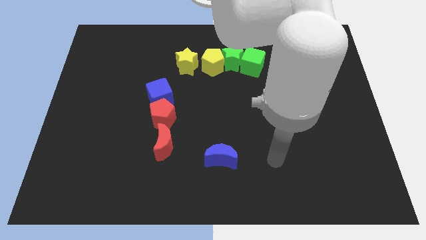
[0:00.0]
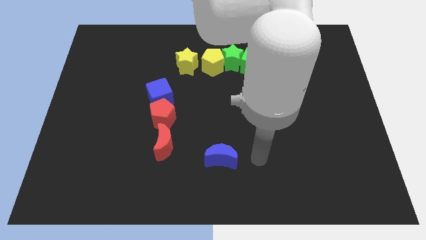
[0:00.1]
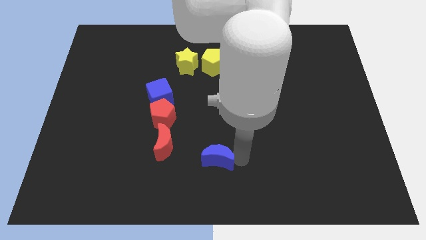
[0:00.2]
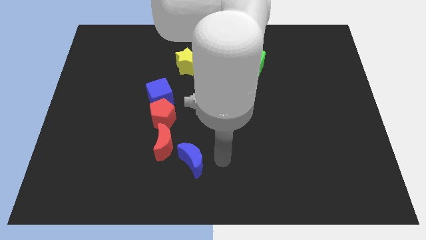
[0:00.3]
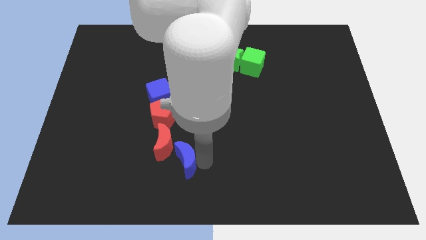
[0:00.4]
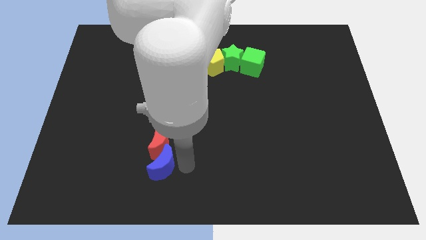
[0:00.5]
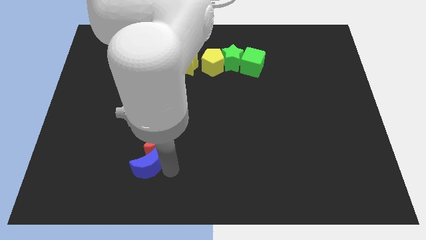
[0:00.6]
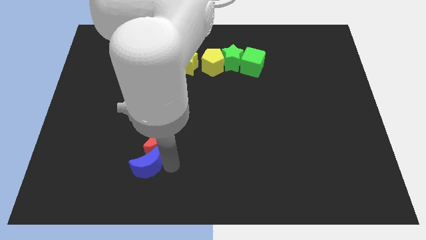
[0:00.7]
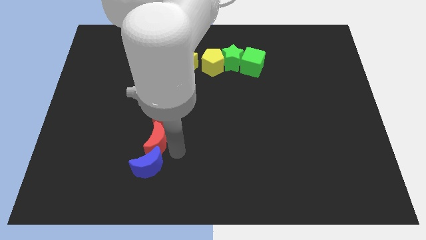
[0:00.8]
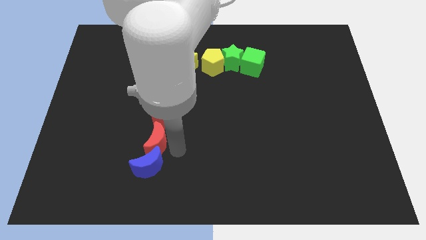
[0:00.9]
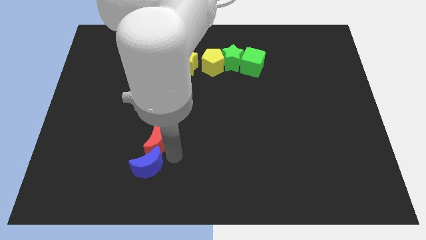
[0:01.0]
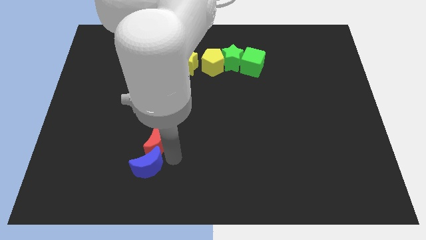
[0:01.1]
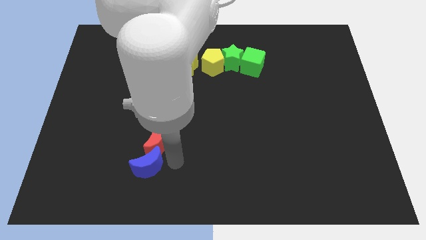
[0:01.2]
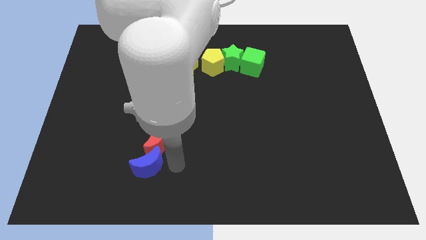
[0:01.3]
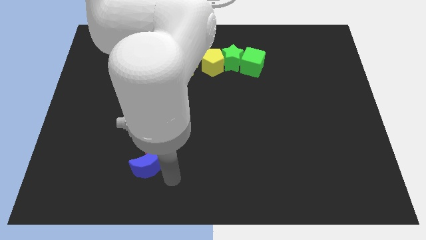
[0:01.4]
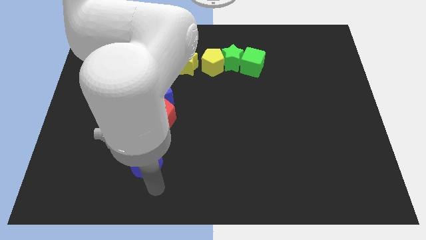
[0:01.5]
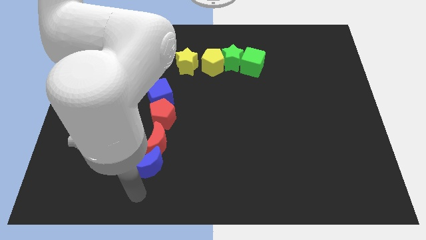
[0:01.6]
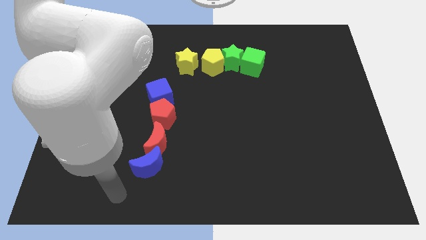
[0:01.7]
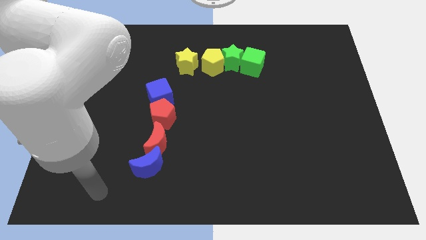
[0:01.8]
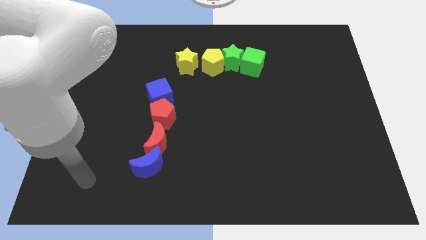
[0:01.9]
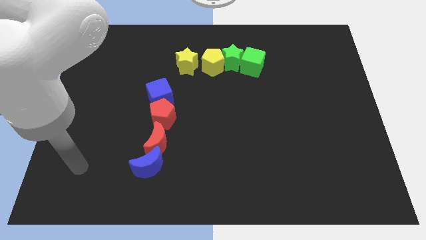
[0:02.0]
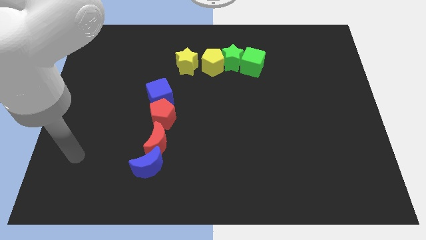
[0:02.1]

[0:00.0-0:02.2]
move the blue moon to the bottom side of the red moon

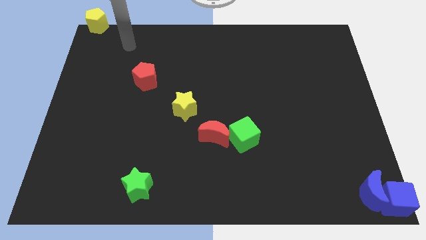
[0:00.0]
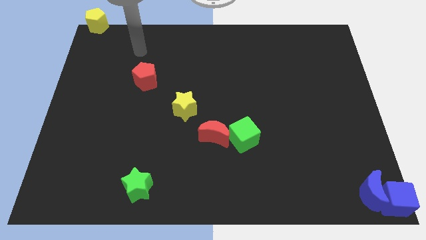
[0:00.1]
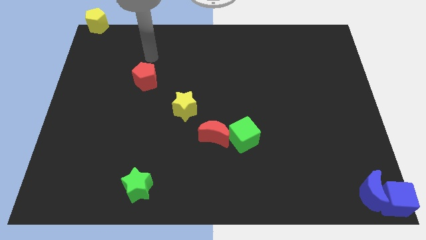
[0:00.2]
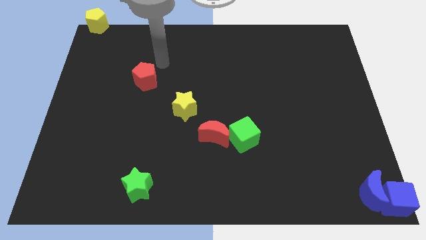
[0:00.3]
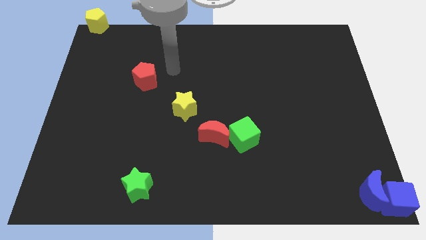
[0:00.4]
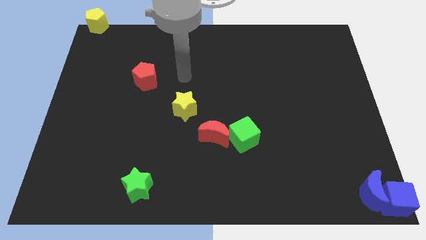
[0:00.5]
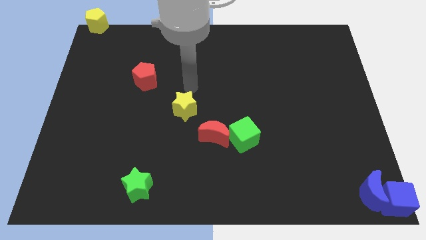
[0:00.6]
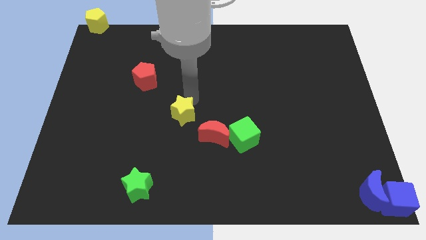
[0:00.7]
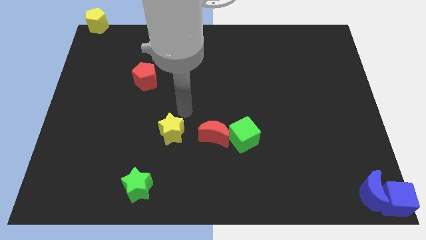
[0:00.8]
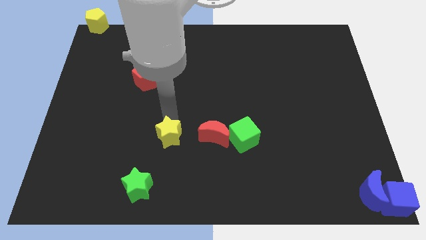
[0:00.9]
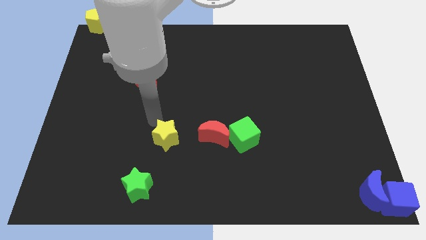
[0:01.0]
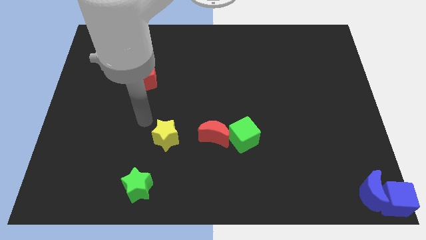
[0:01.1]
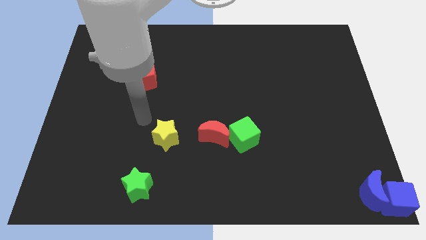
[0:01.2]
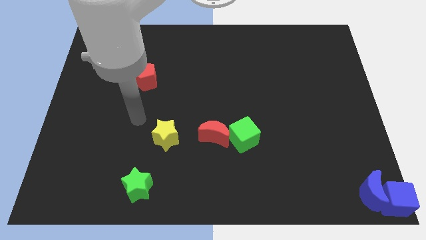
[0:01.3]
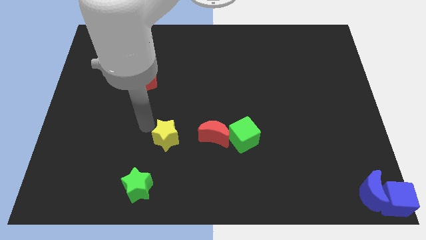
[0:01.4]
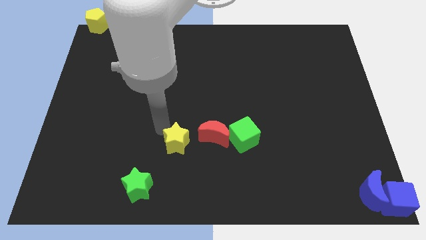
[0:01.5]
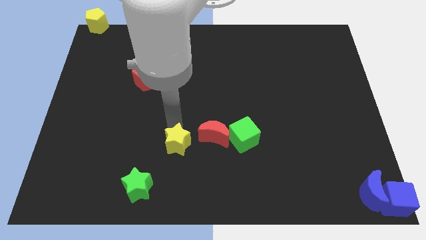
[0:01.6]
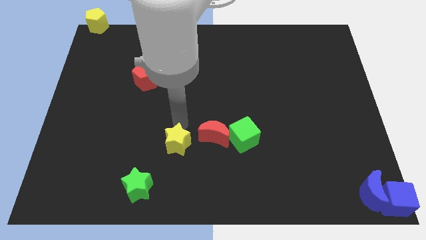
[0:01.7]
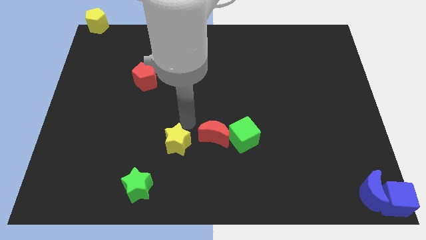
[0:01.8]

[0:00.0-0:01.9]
push the yellow star diagonal to the green star

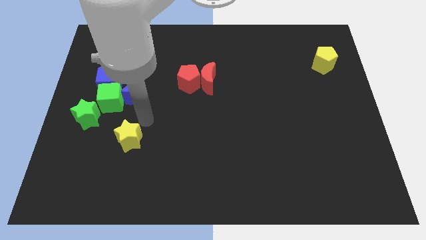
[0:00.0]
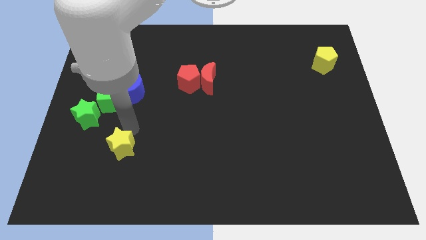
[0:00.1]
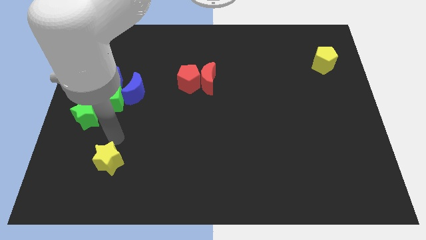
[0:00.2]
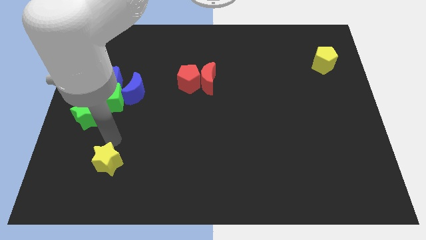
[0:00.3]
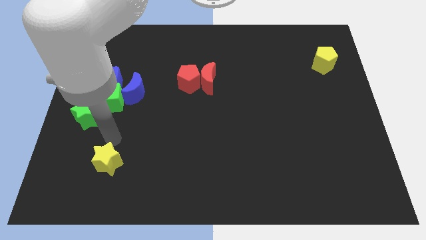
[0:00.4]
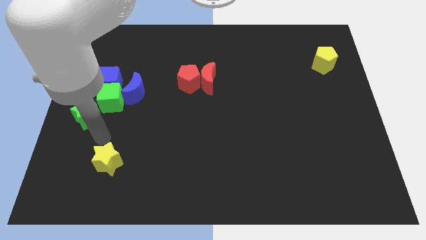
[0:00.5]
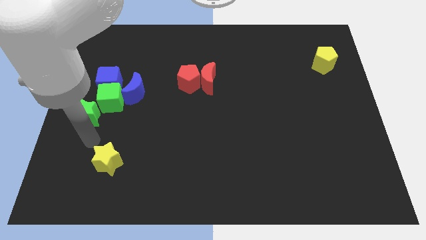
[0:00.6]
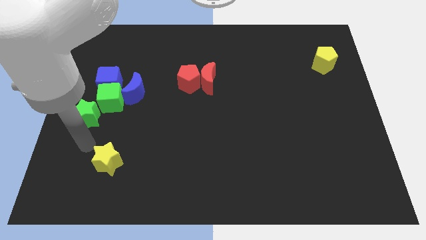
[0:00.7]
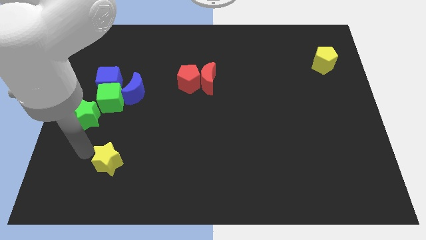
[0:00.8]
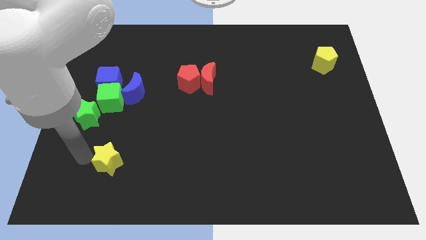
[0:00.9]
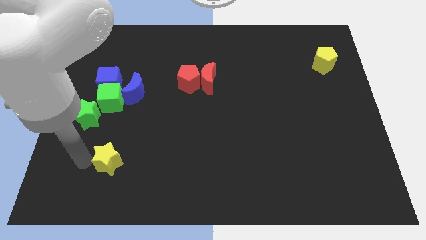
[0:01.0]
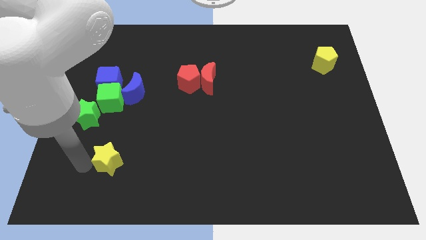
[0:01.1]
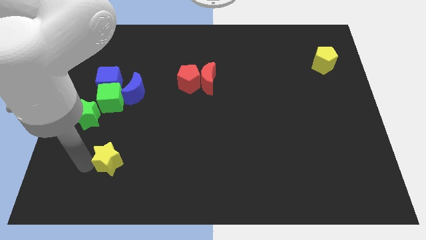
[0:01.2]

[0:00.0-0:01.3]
put the yellow star vertically below the green cube

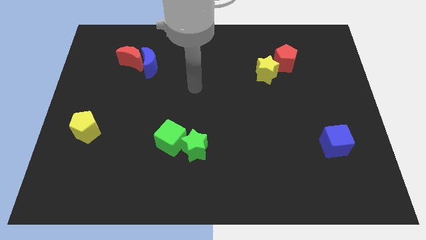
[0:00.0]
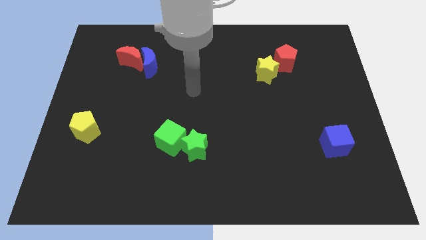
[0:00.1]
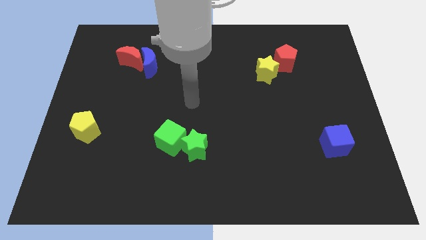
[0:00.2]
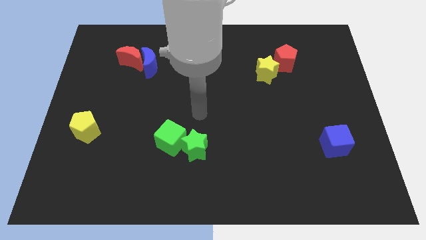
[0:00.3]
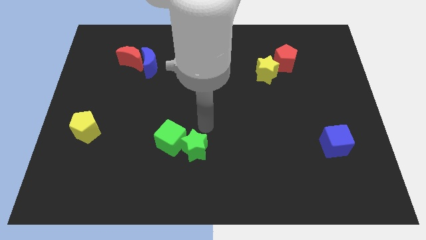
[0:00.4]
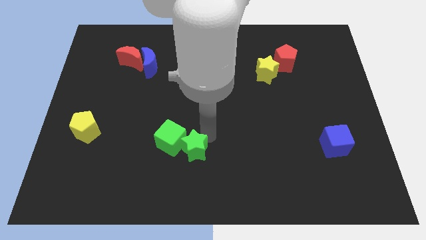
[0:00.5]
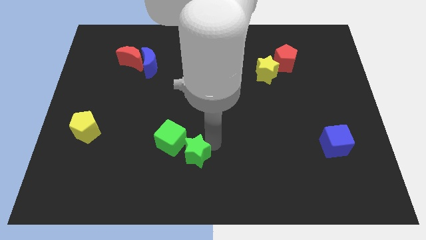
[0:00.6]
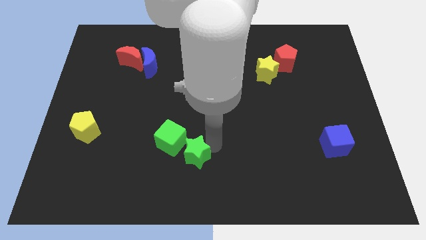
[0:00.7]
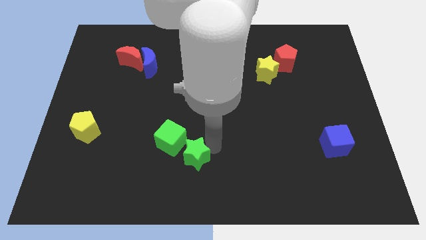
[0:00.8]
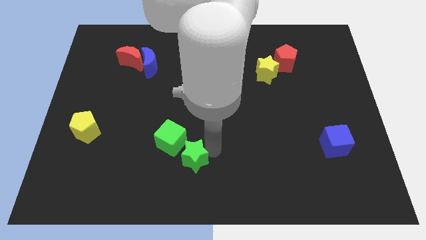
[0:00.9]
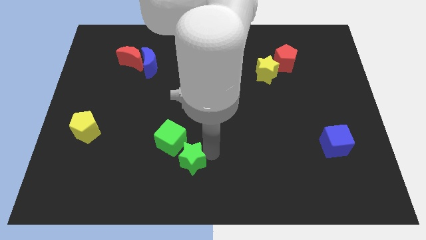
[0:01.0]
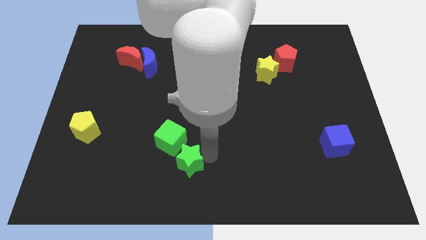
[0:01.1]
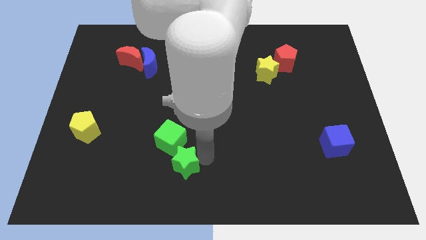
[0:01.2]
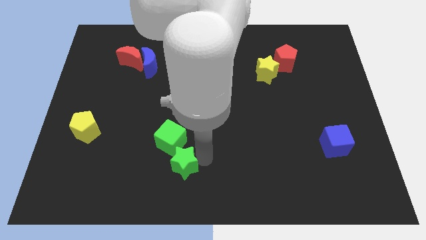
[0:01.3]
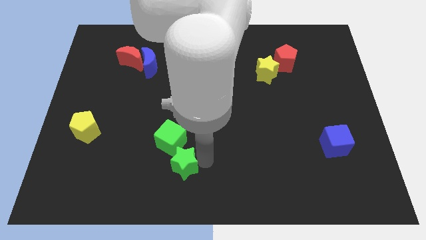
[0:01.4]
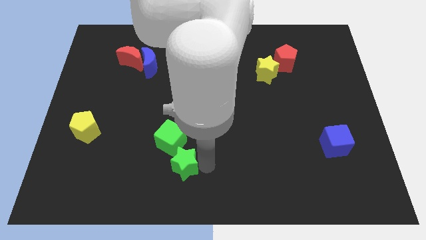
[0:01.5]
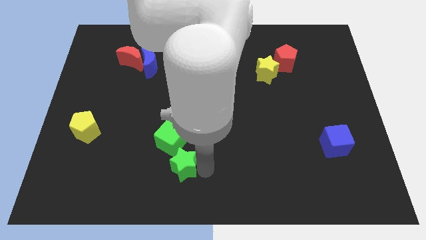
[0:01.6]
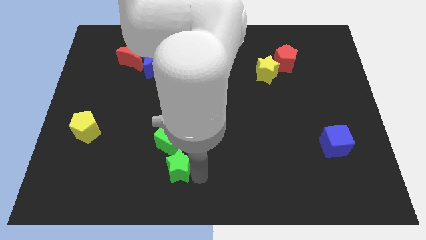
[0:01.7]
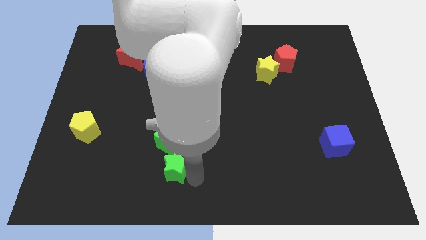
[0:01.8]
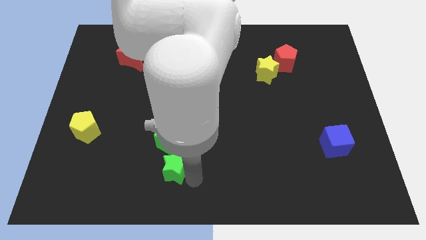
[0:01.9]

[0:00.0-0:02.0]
move the green star below the green cube

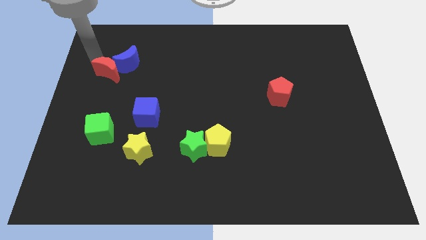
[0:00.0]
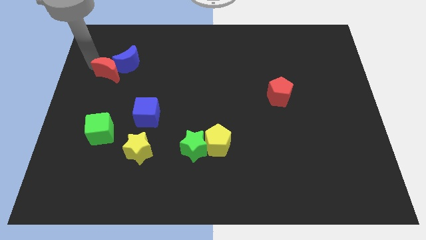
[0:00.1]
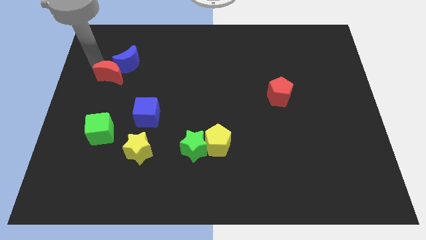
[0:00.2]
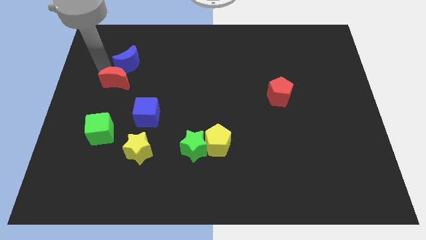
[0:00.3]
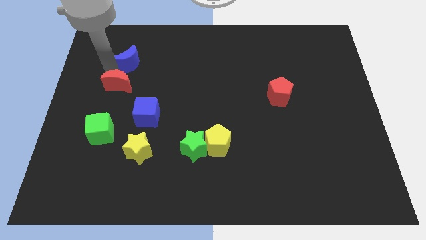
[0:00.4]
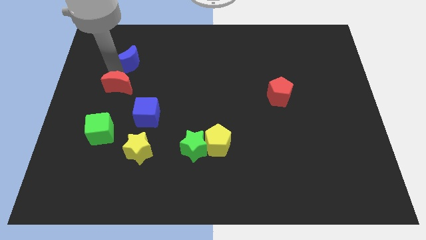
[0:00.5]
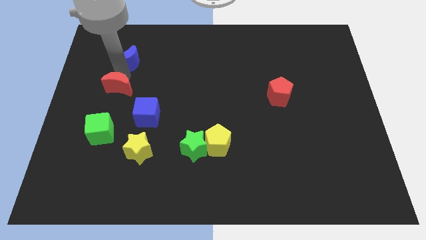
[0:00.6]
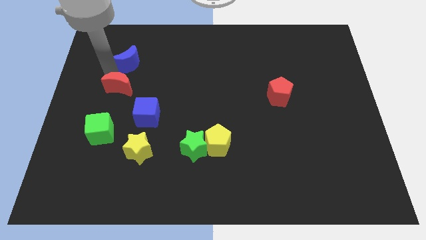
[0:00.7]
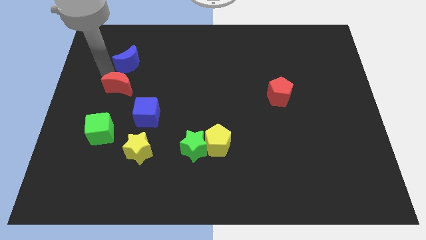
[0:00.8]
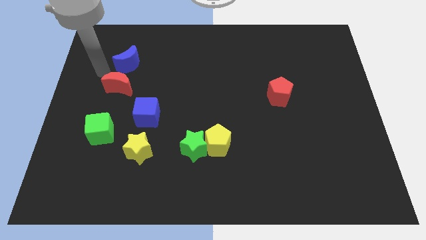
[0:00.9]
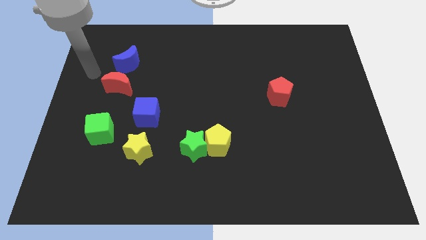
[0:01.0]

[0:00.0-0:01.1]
separate red moon from blue moon

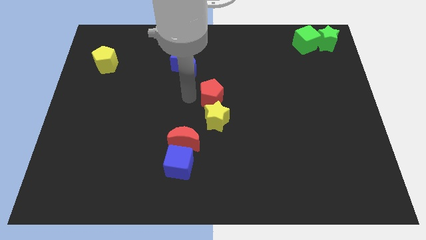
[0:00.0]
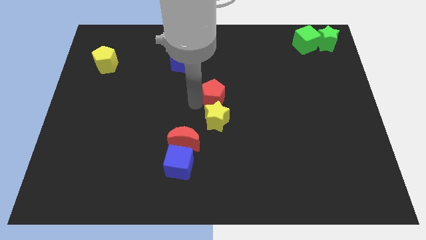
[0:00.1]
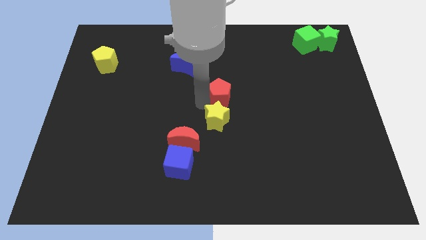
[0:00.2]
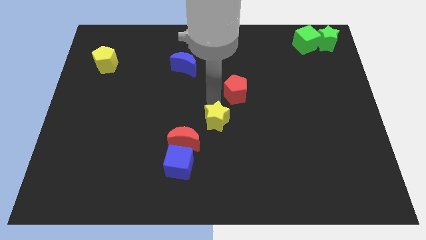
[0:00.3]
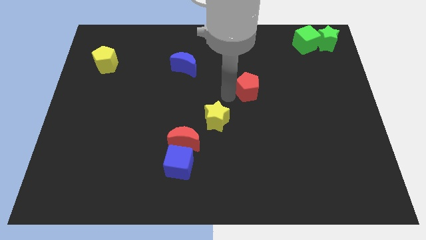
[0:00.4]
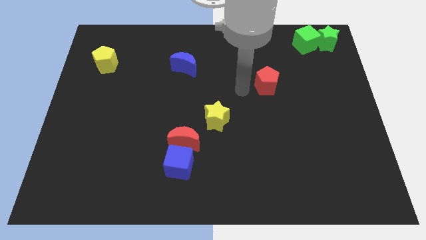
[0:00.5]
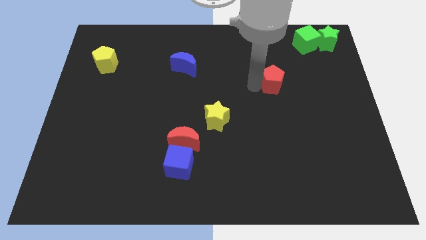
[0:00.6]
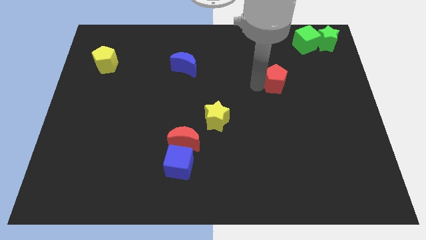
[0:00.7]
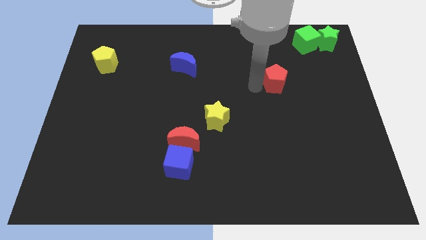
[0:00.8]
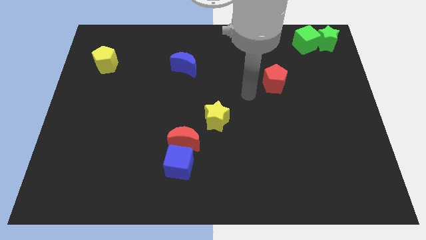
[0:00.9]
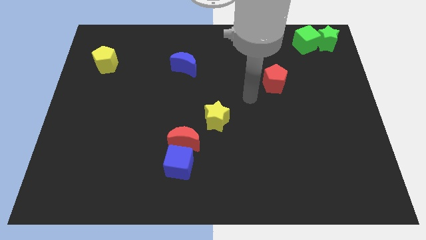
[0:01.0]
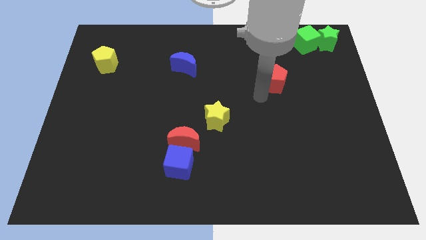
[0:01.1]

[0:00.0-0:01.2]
separate the red pentagon from the yellow star
